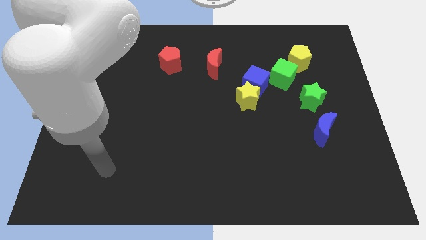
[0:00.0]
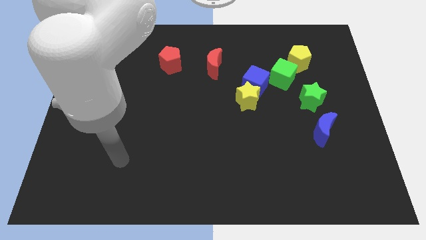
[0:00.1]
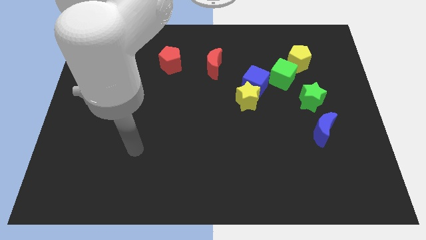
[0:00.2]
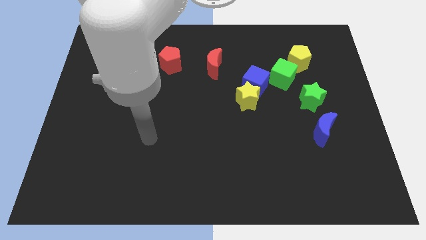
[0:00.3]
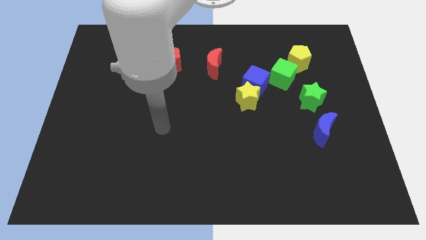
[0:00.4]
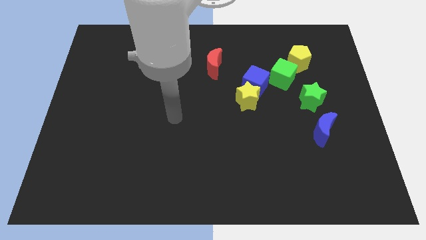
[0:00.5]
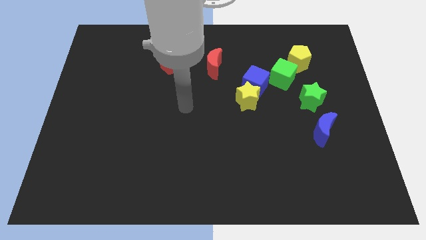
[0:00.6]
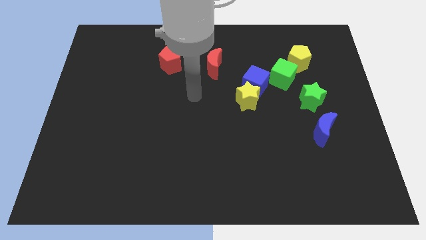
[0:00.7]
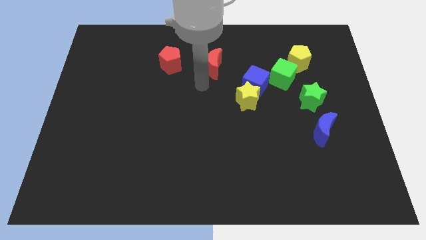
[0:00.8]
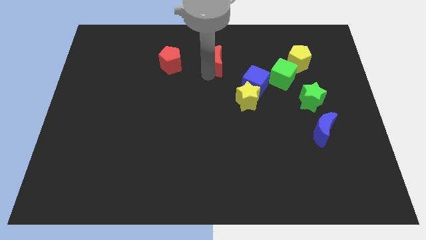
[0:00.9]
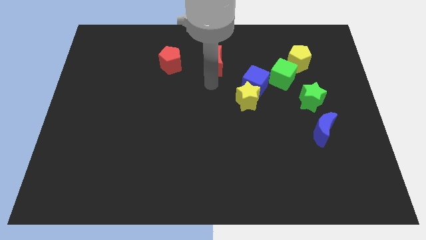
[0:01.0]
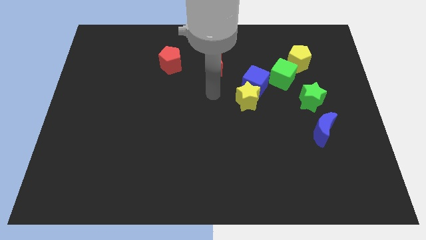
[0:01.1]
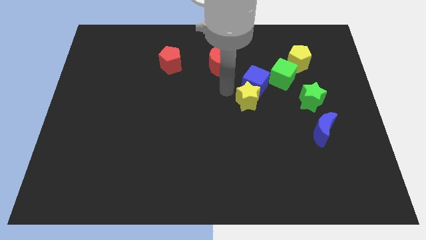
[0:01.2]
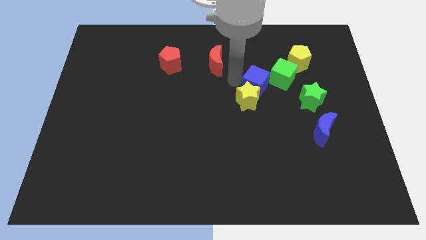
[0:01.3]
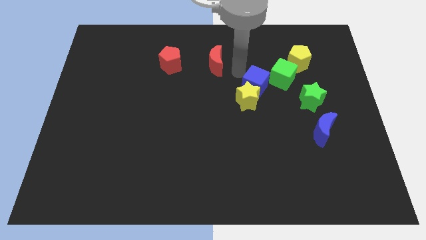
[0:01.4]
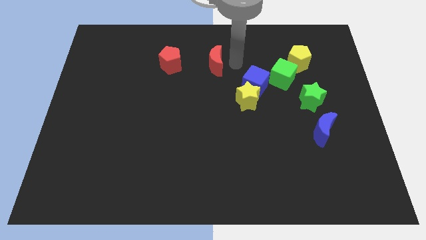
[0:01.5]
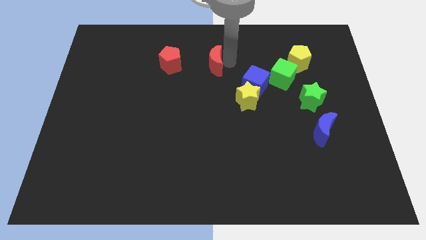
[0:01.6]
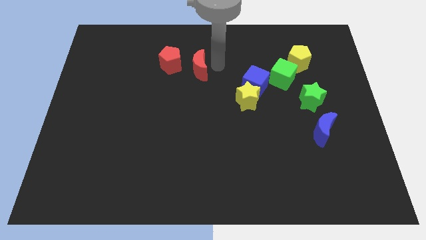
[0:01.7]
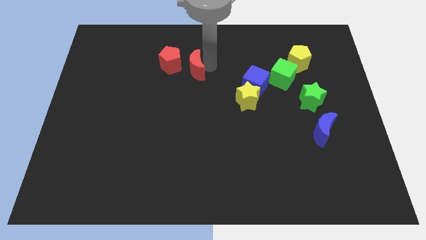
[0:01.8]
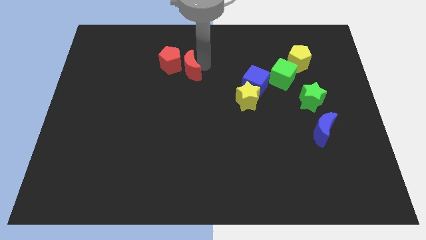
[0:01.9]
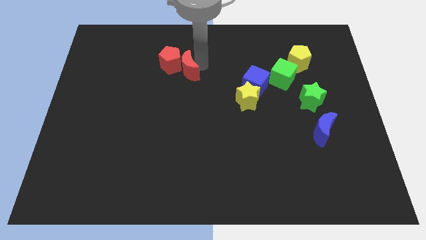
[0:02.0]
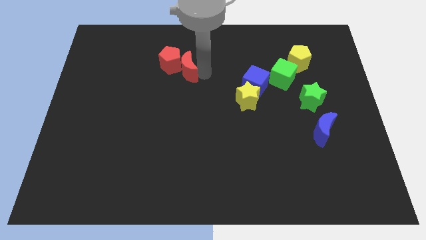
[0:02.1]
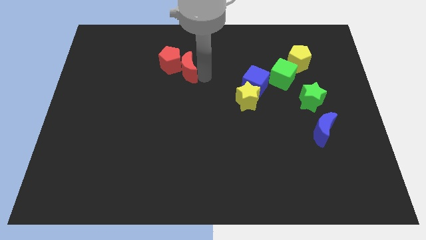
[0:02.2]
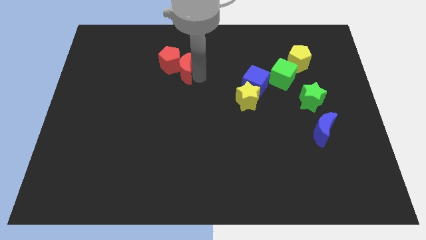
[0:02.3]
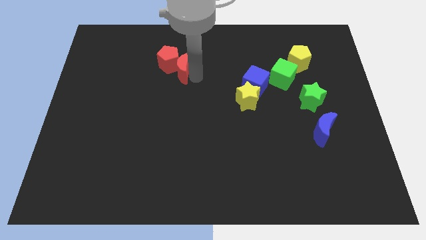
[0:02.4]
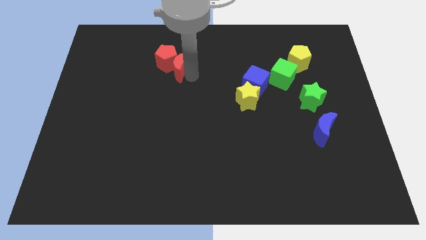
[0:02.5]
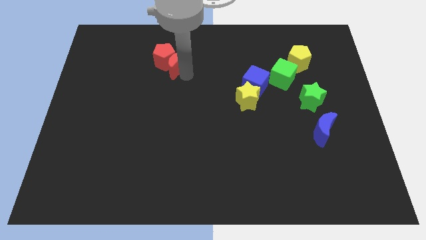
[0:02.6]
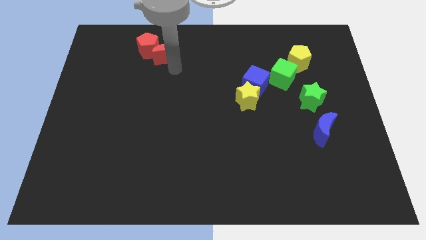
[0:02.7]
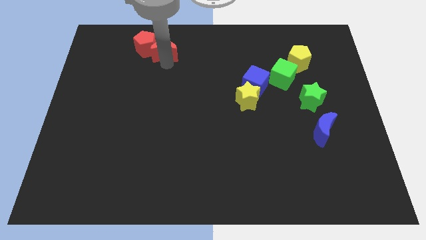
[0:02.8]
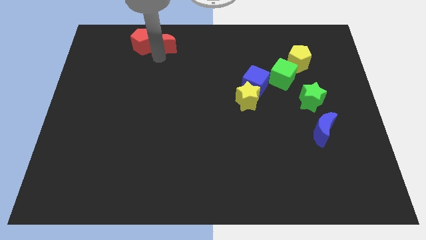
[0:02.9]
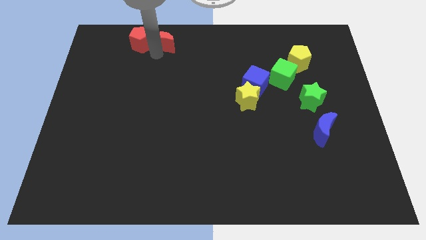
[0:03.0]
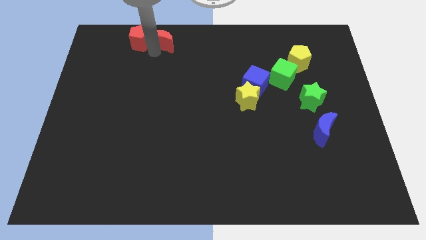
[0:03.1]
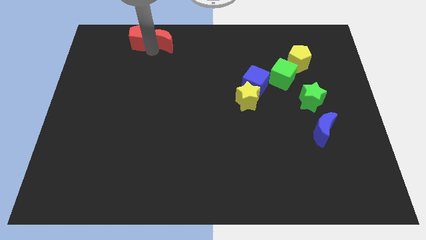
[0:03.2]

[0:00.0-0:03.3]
push the red moon into the red pentagon

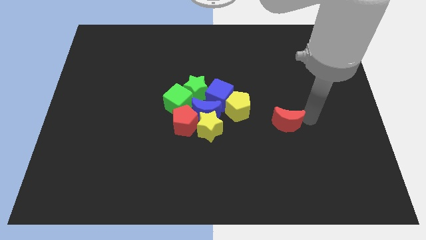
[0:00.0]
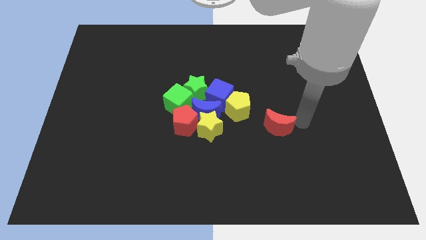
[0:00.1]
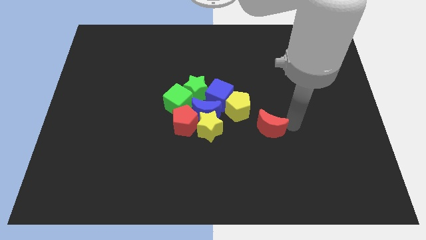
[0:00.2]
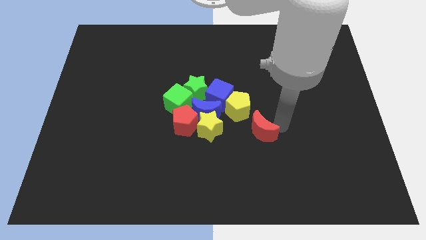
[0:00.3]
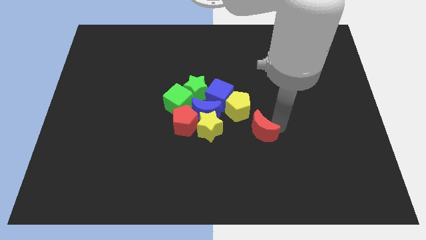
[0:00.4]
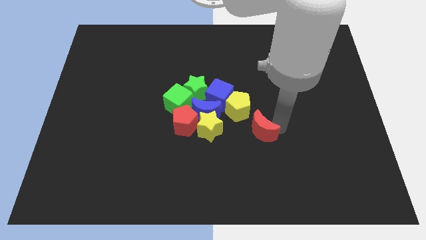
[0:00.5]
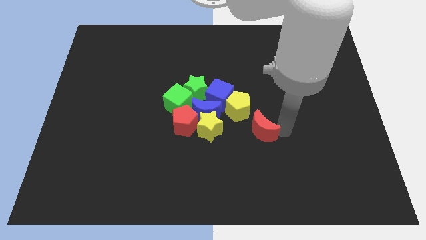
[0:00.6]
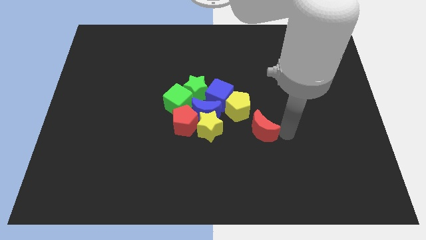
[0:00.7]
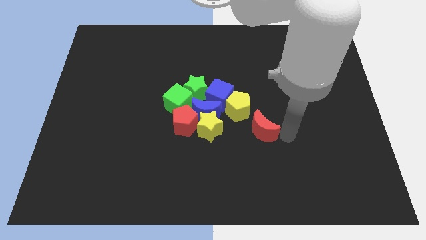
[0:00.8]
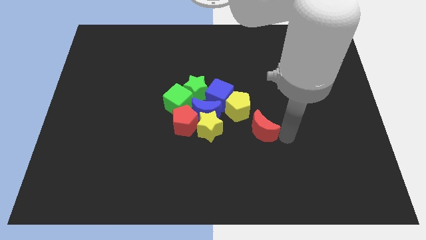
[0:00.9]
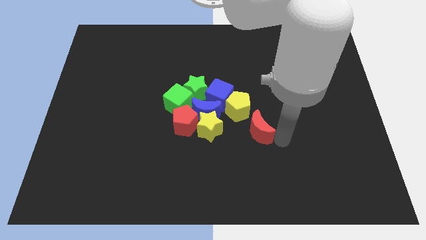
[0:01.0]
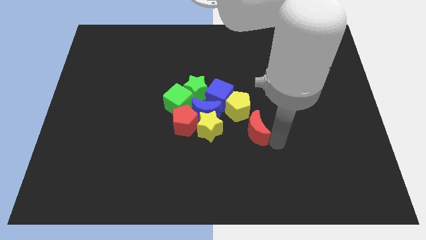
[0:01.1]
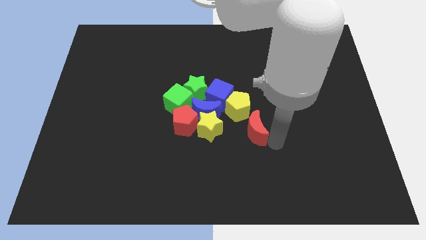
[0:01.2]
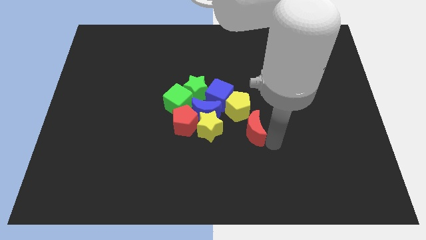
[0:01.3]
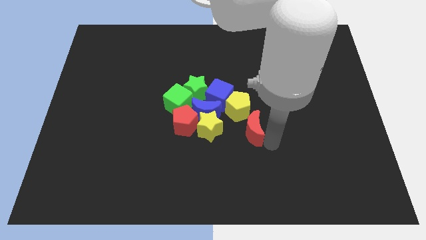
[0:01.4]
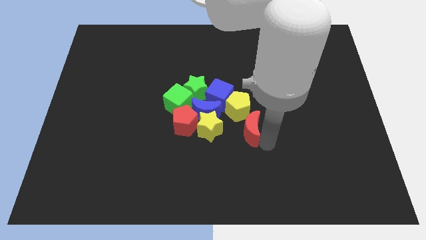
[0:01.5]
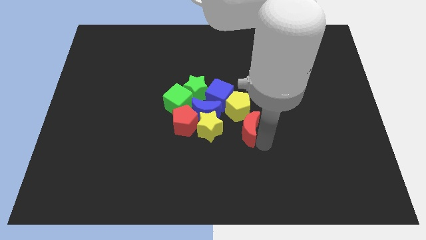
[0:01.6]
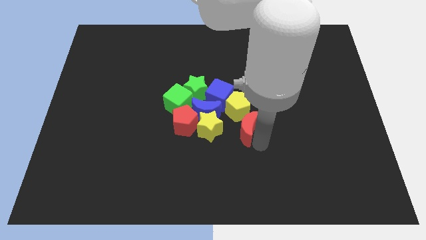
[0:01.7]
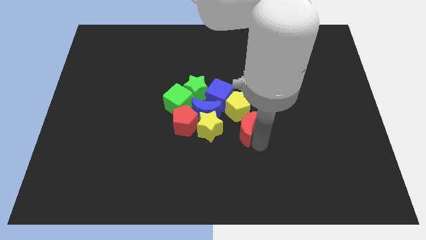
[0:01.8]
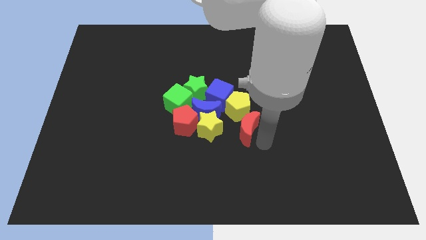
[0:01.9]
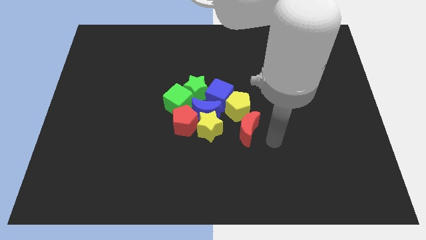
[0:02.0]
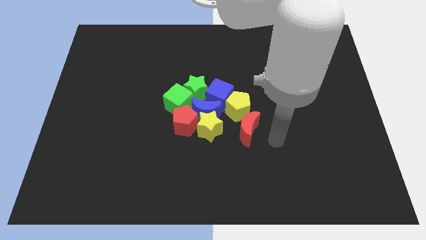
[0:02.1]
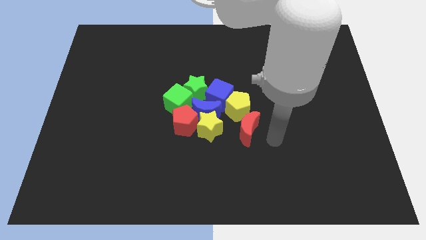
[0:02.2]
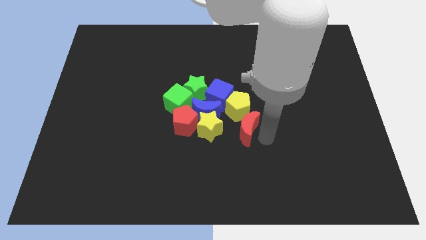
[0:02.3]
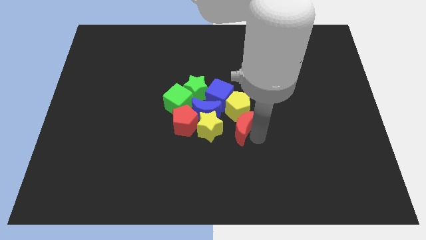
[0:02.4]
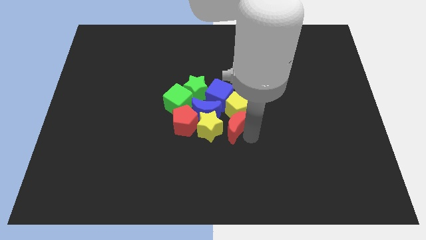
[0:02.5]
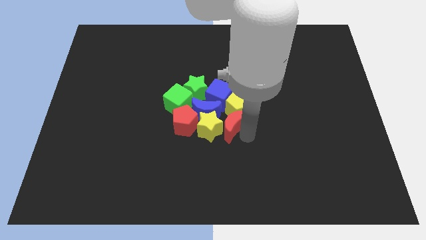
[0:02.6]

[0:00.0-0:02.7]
push the red crescent into the group of blocks

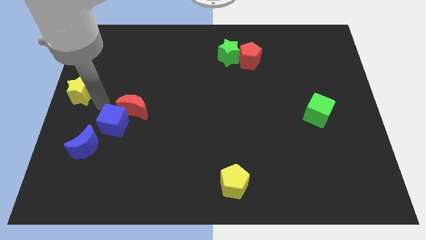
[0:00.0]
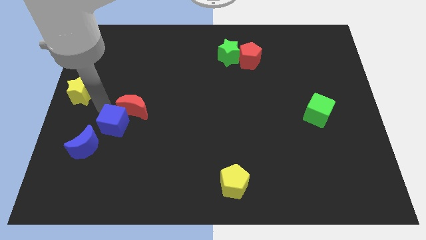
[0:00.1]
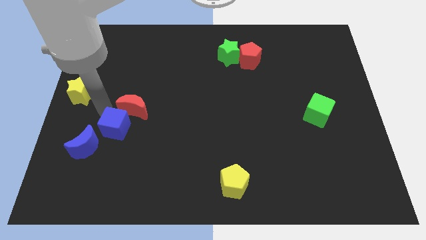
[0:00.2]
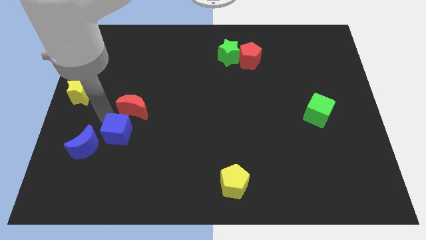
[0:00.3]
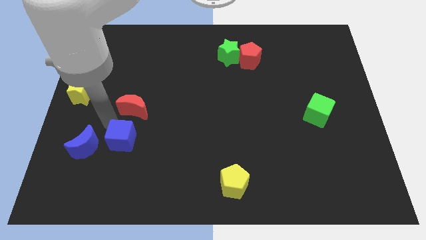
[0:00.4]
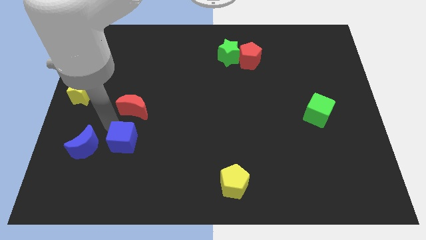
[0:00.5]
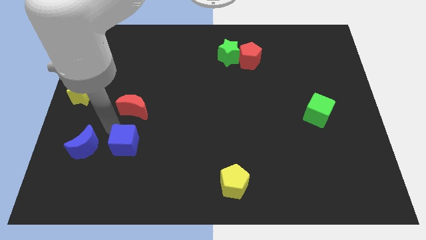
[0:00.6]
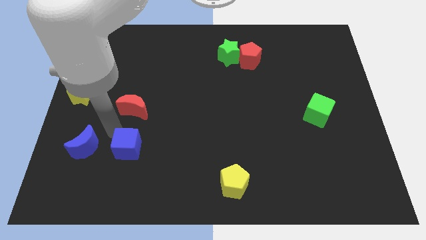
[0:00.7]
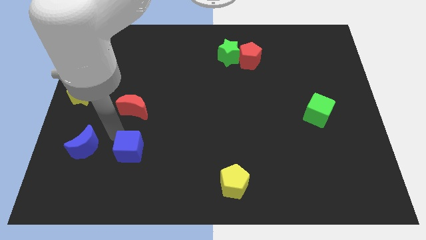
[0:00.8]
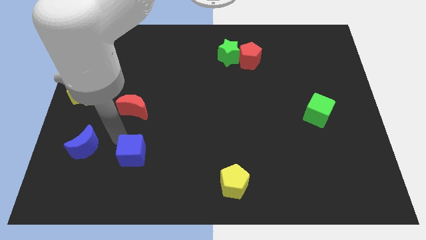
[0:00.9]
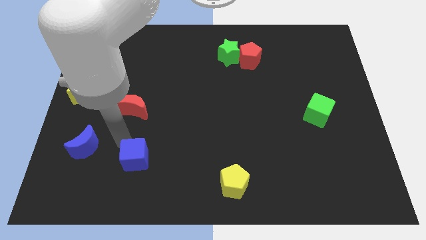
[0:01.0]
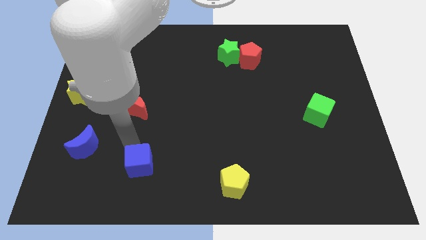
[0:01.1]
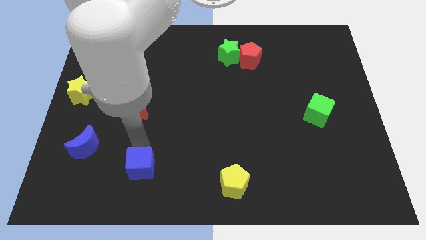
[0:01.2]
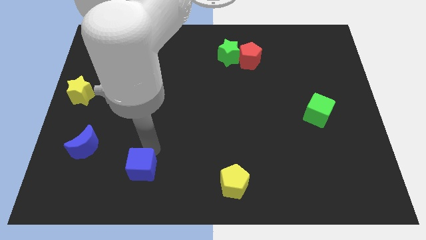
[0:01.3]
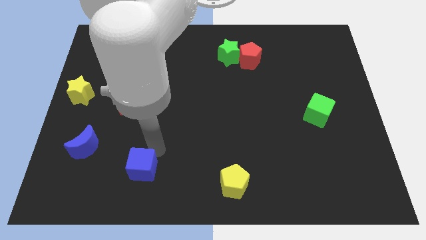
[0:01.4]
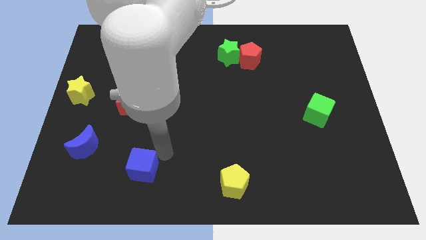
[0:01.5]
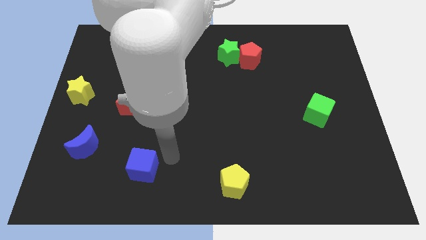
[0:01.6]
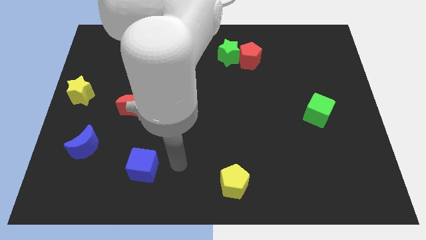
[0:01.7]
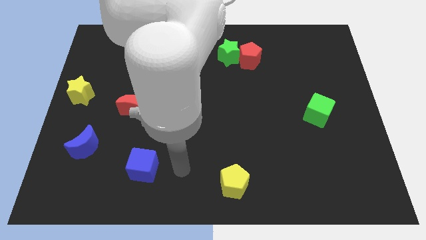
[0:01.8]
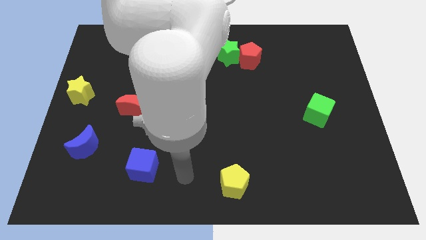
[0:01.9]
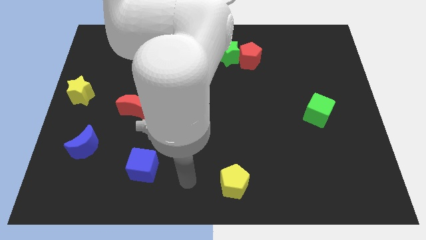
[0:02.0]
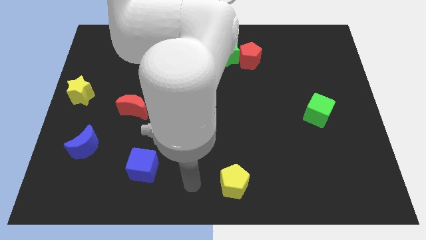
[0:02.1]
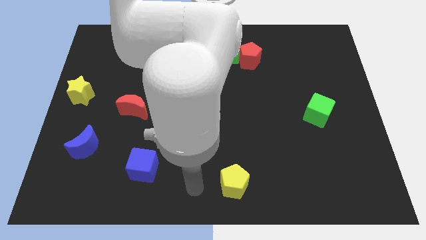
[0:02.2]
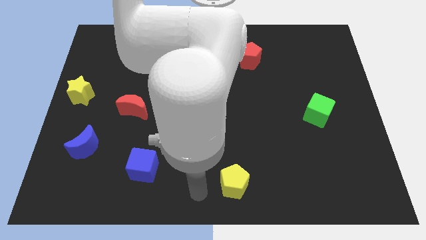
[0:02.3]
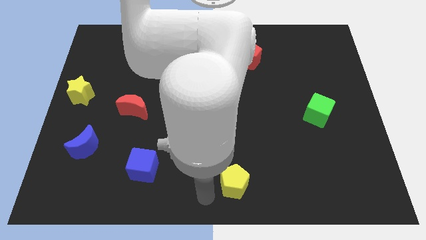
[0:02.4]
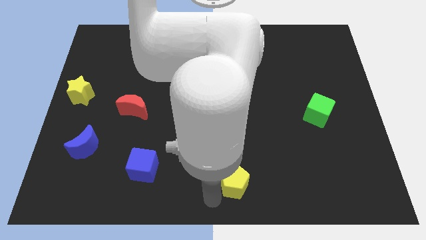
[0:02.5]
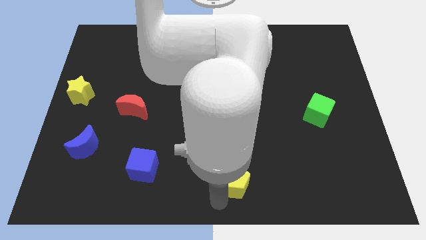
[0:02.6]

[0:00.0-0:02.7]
push the blue cube towards the bottom side of the board

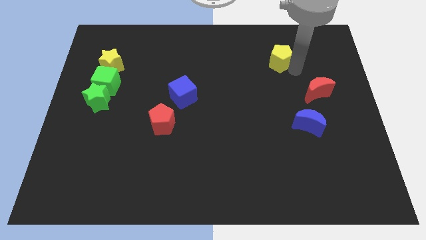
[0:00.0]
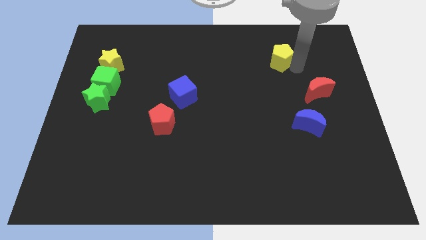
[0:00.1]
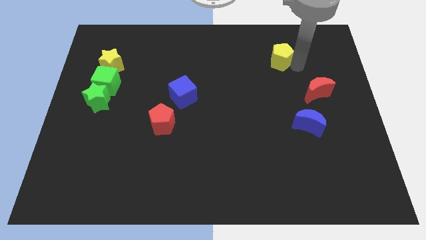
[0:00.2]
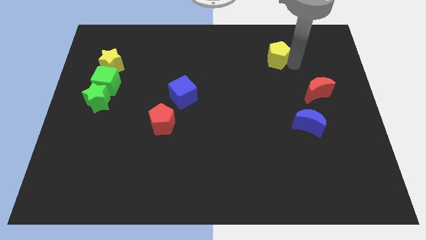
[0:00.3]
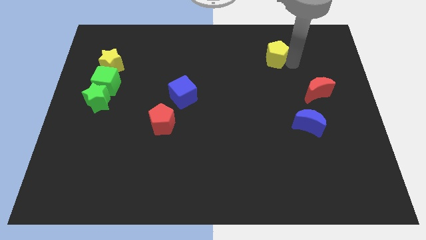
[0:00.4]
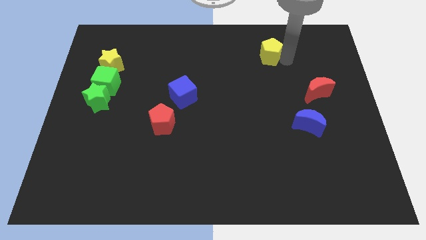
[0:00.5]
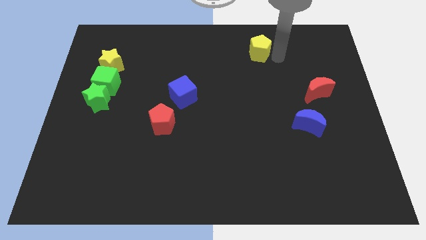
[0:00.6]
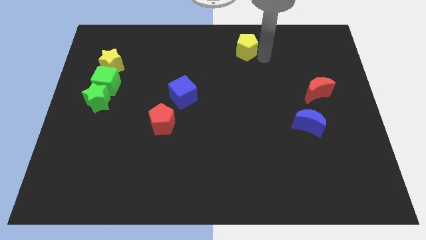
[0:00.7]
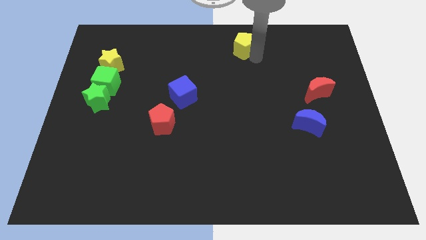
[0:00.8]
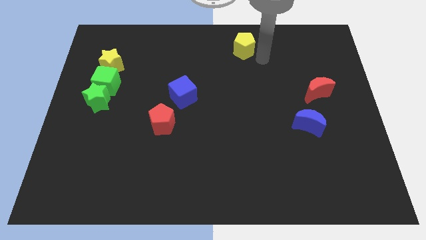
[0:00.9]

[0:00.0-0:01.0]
push the yellow pentagon towards the top center
